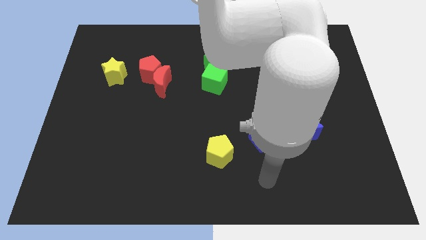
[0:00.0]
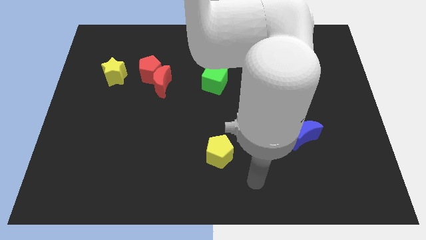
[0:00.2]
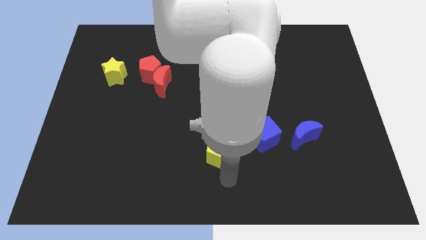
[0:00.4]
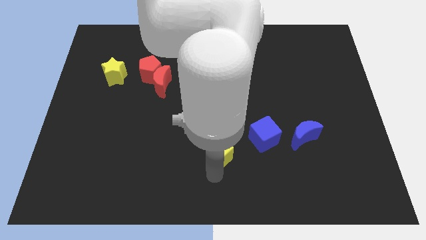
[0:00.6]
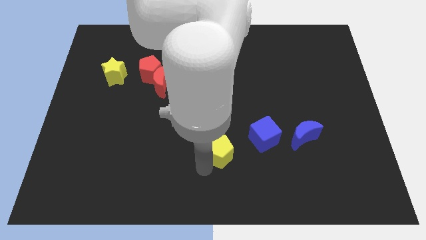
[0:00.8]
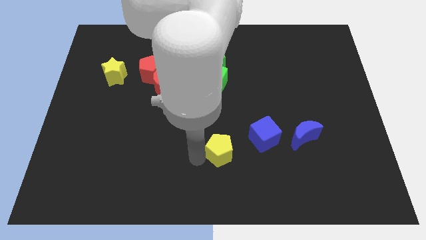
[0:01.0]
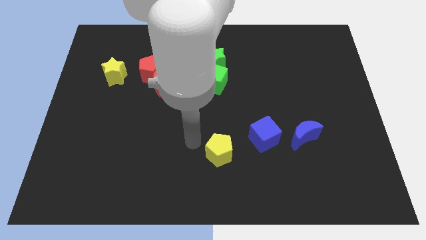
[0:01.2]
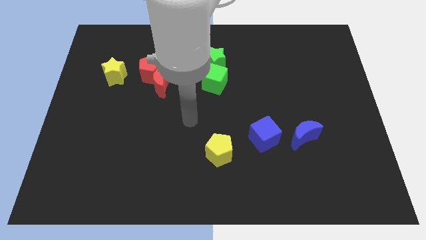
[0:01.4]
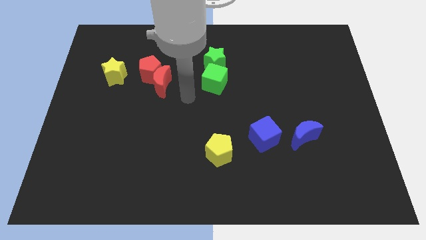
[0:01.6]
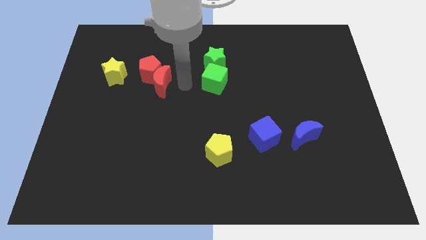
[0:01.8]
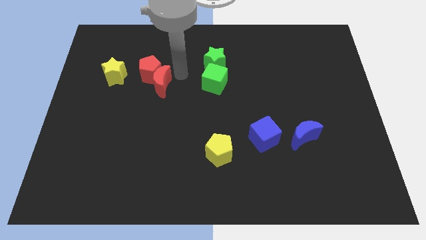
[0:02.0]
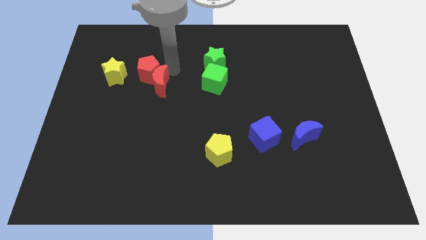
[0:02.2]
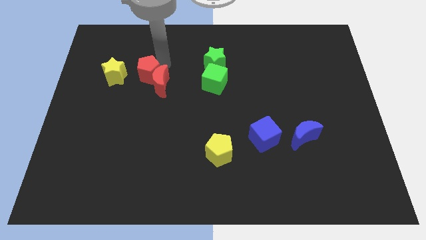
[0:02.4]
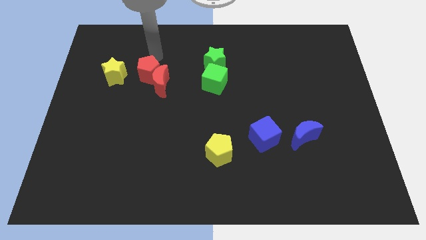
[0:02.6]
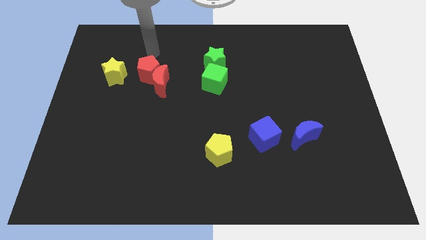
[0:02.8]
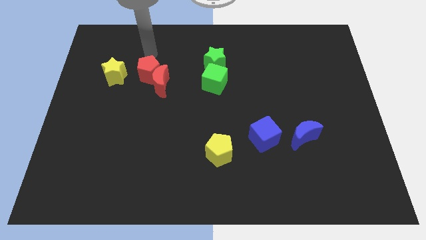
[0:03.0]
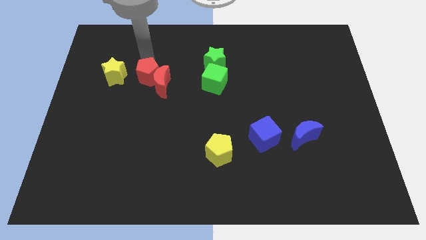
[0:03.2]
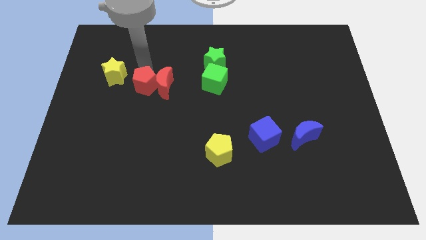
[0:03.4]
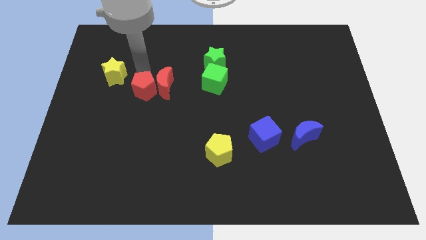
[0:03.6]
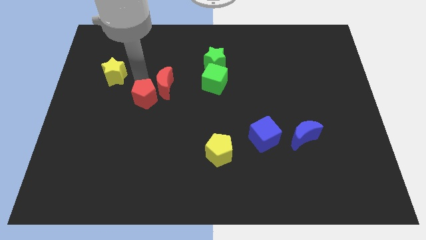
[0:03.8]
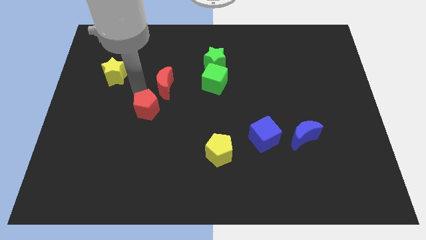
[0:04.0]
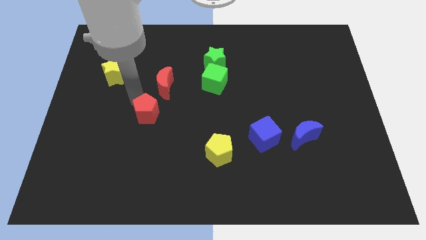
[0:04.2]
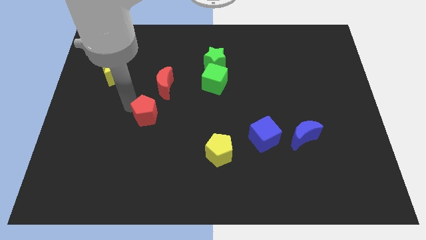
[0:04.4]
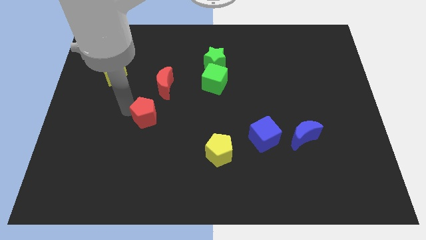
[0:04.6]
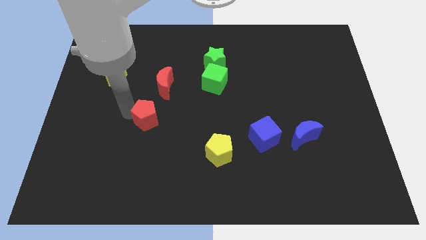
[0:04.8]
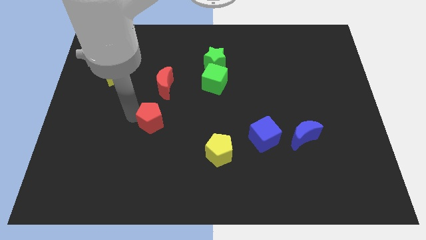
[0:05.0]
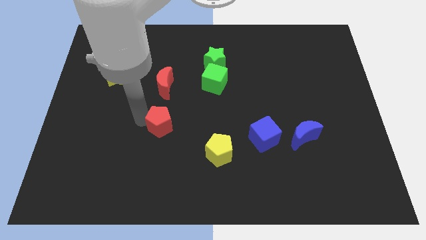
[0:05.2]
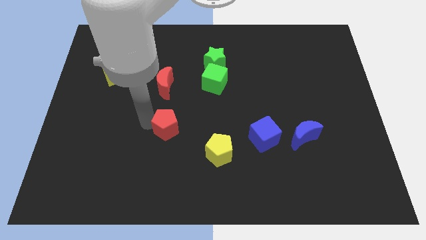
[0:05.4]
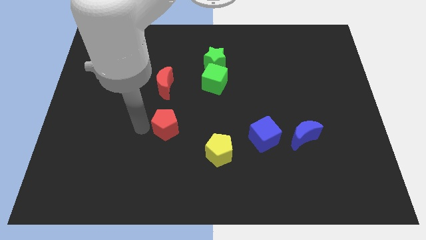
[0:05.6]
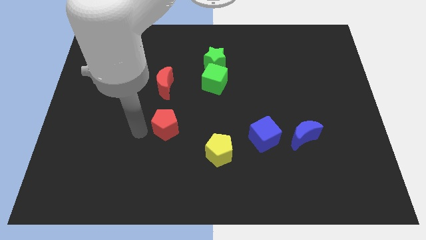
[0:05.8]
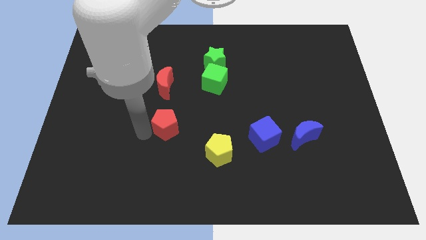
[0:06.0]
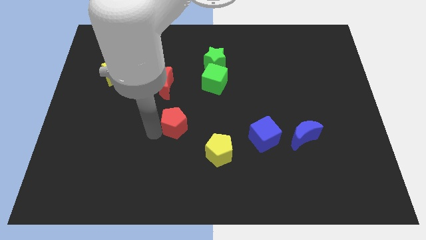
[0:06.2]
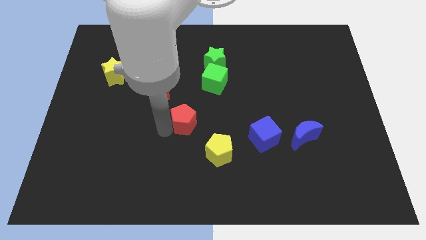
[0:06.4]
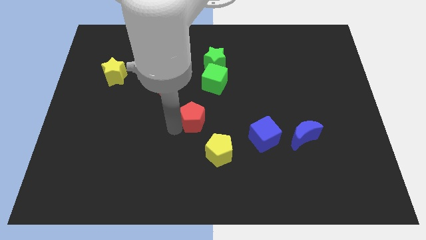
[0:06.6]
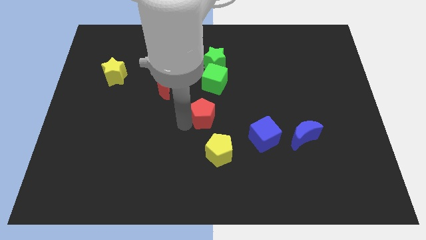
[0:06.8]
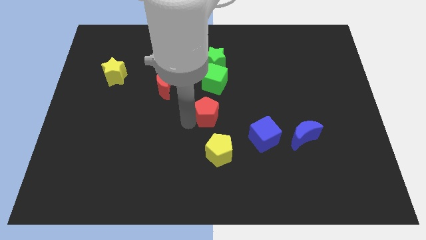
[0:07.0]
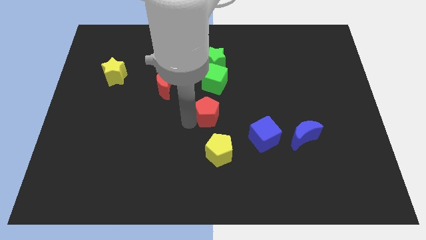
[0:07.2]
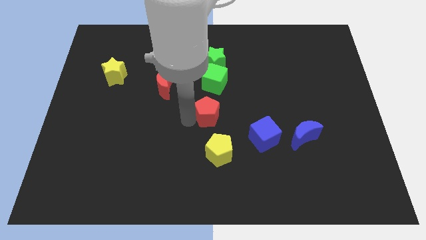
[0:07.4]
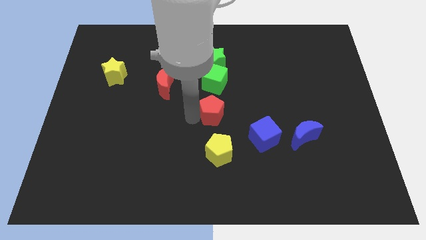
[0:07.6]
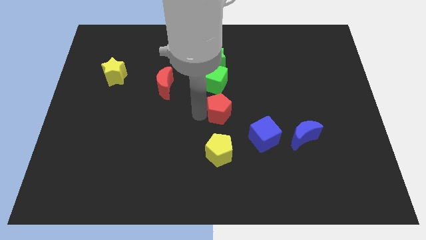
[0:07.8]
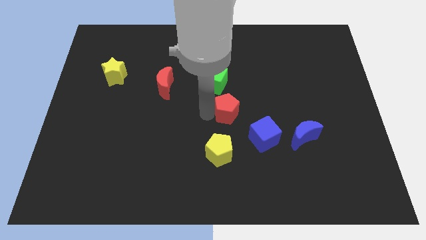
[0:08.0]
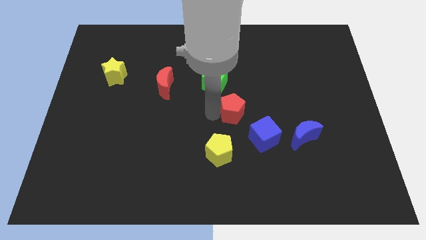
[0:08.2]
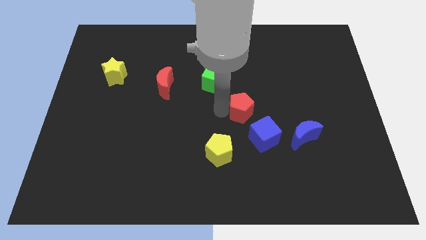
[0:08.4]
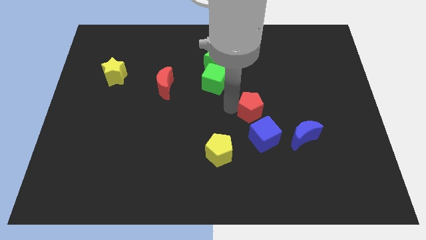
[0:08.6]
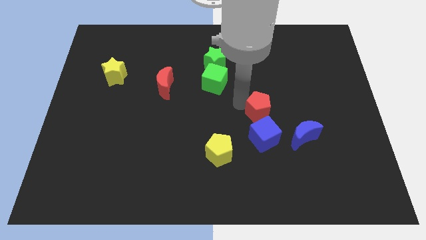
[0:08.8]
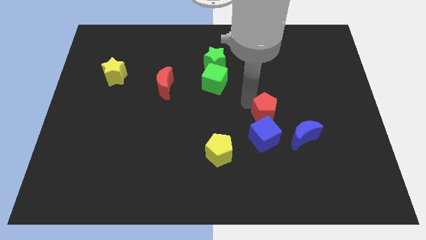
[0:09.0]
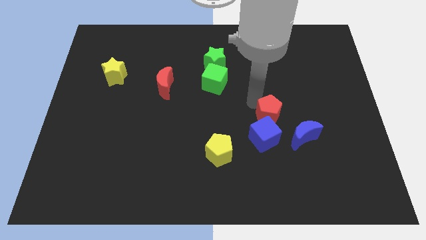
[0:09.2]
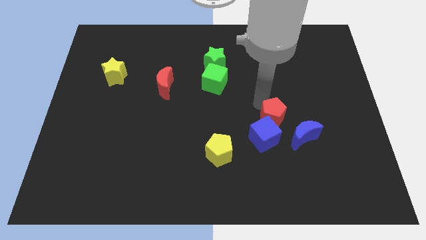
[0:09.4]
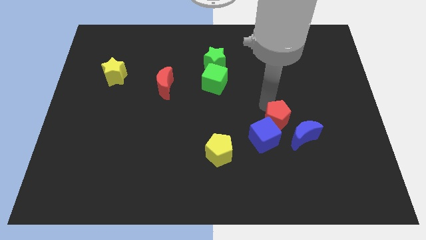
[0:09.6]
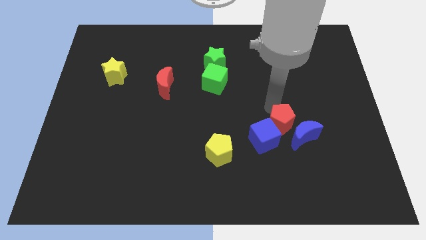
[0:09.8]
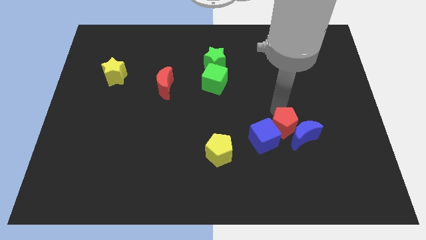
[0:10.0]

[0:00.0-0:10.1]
push the red pentagon to the blue moon

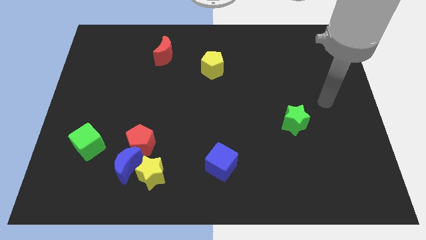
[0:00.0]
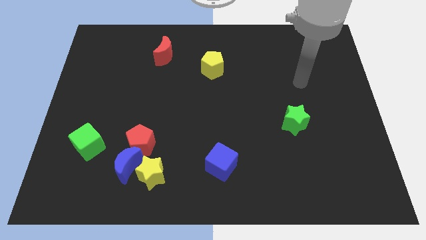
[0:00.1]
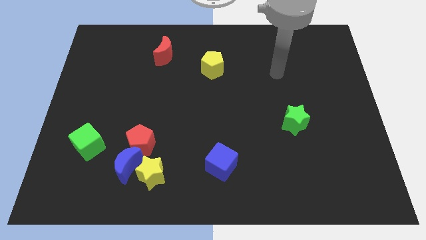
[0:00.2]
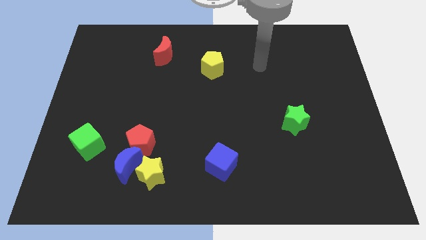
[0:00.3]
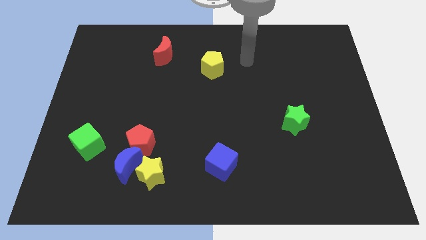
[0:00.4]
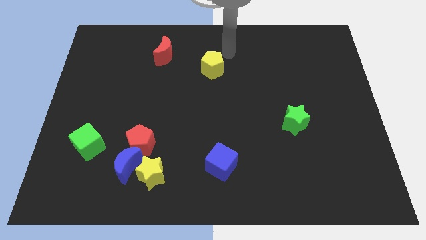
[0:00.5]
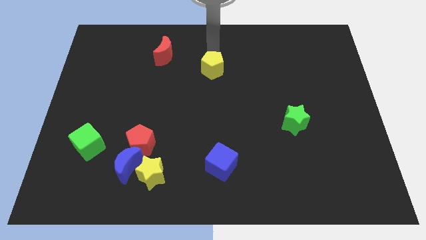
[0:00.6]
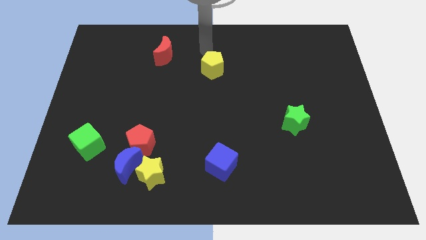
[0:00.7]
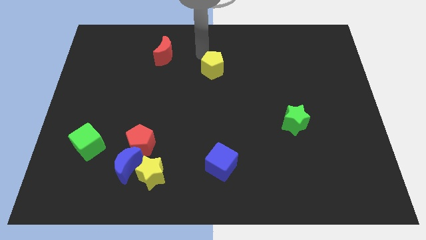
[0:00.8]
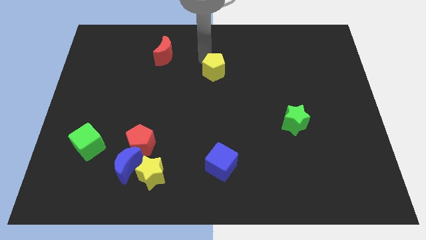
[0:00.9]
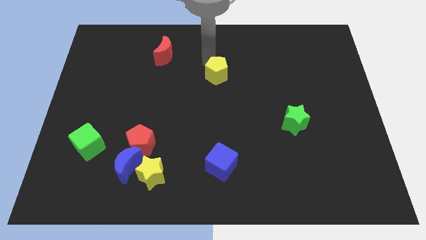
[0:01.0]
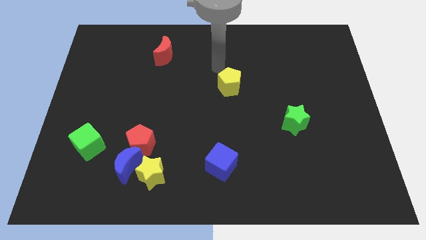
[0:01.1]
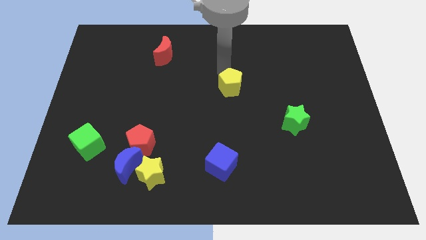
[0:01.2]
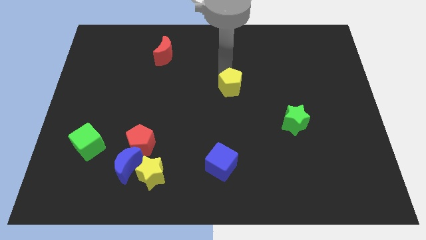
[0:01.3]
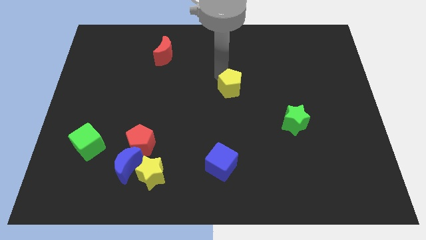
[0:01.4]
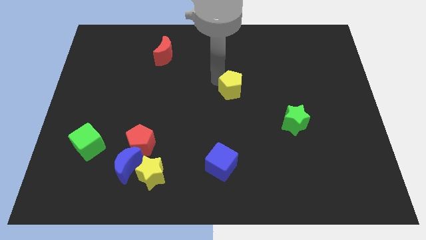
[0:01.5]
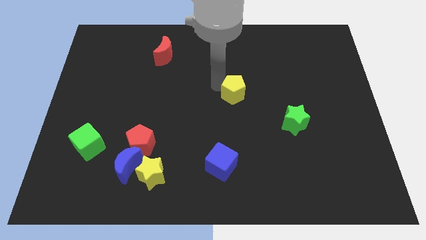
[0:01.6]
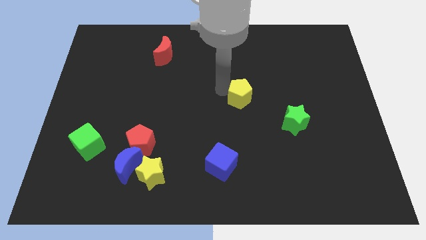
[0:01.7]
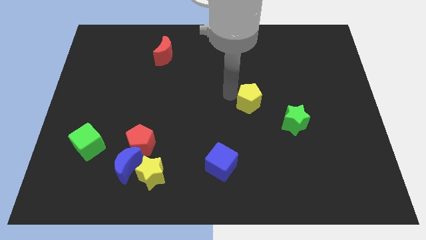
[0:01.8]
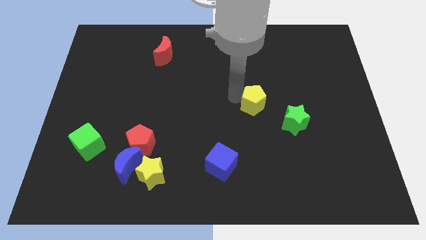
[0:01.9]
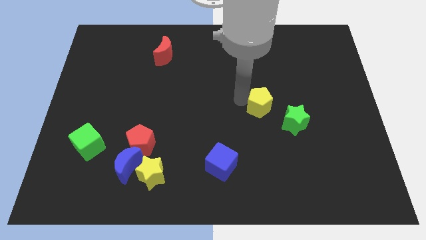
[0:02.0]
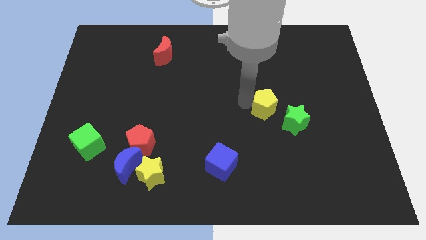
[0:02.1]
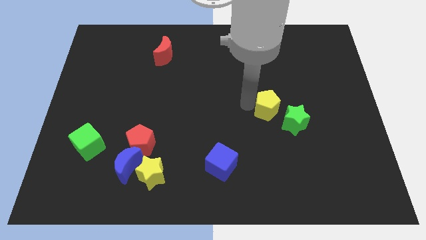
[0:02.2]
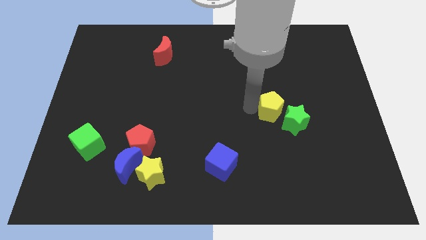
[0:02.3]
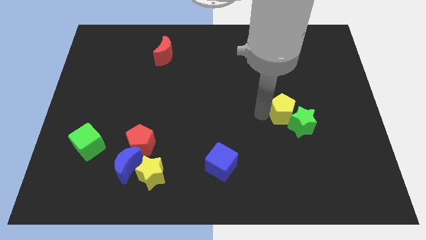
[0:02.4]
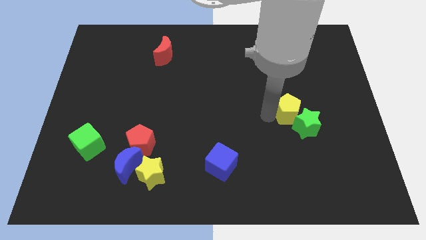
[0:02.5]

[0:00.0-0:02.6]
push the yellow pentagon to the green star

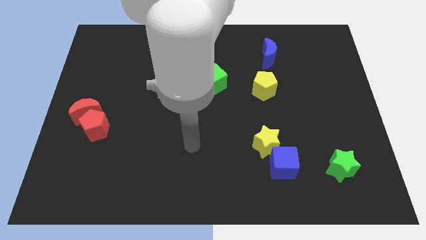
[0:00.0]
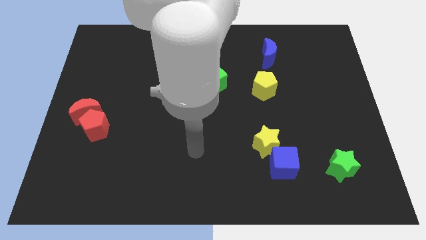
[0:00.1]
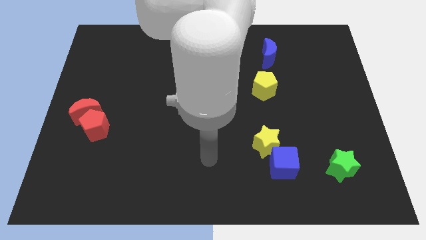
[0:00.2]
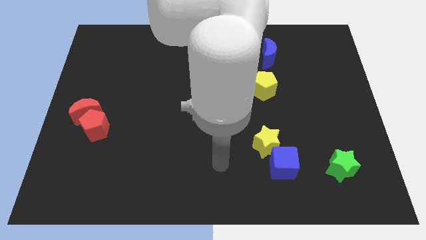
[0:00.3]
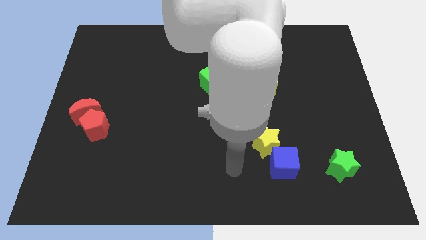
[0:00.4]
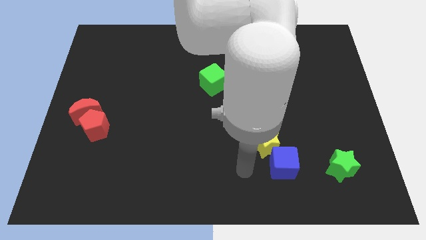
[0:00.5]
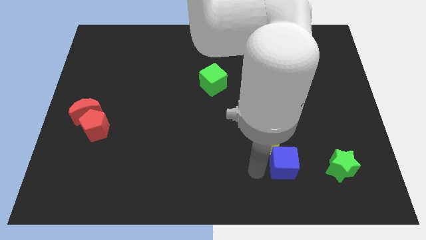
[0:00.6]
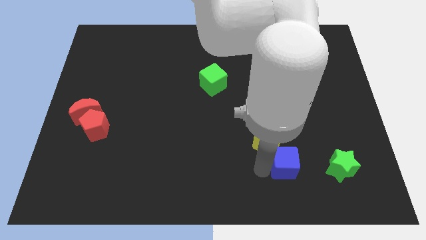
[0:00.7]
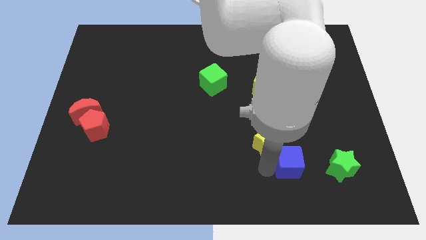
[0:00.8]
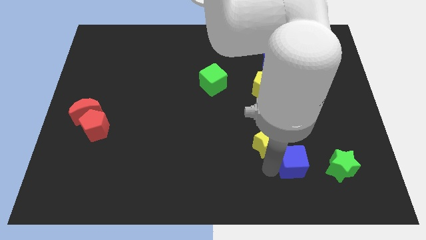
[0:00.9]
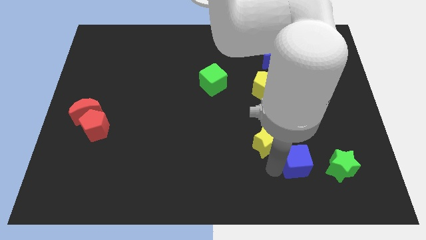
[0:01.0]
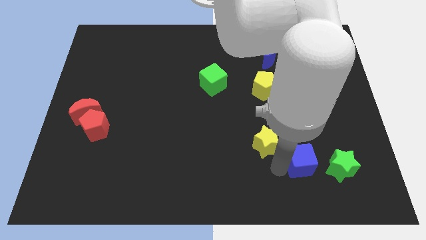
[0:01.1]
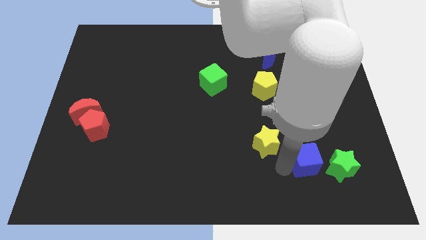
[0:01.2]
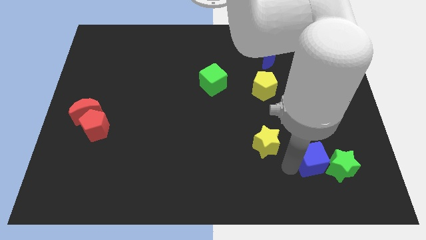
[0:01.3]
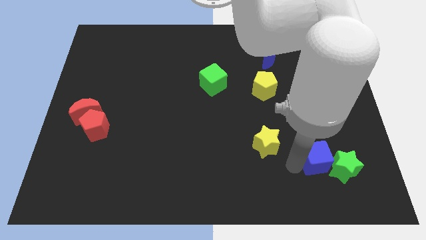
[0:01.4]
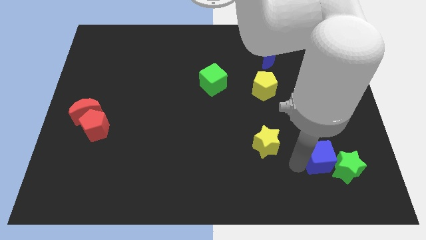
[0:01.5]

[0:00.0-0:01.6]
slide the blue cube close to the green star
